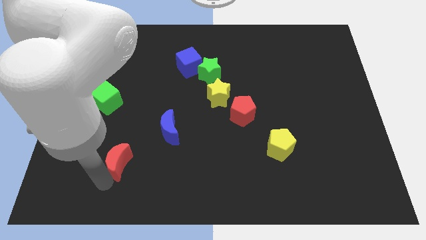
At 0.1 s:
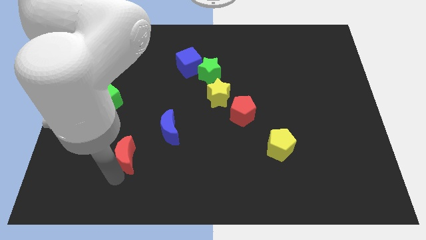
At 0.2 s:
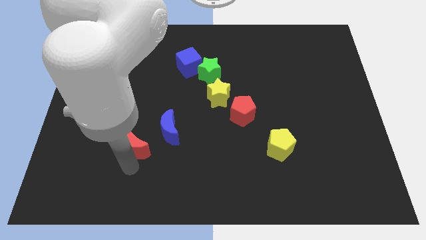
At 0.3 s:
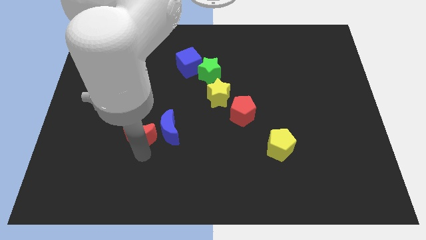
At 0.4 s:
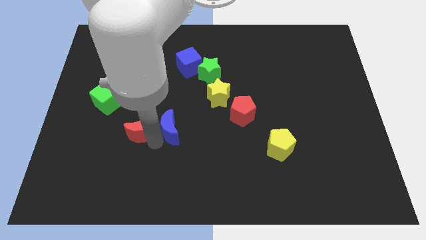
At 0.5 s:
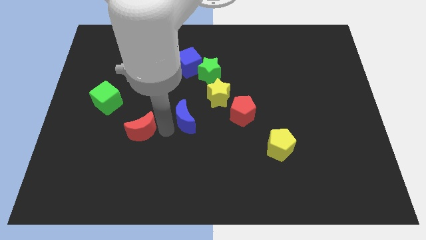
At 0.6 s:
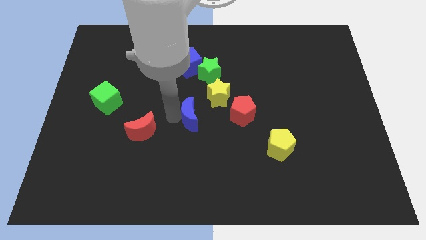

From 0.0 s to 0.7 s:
touch at the left side of the blue crescent

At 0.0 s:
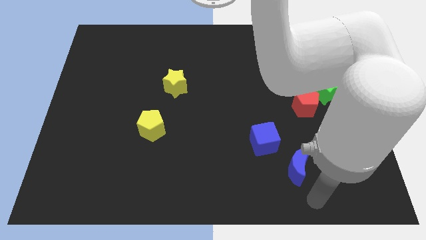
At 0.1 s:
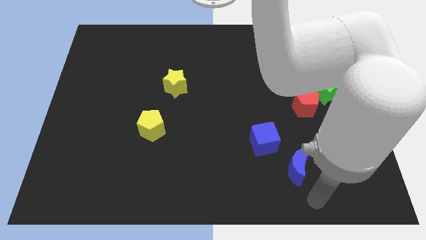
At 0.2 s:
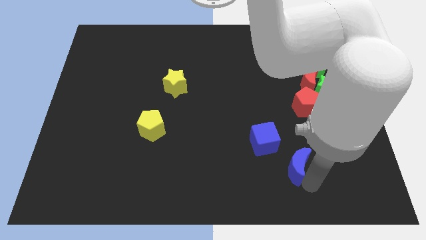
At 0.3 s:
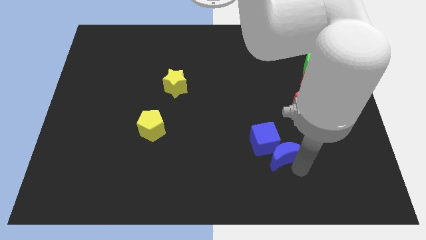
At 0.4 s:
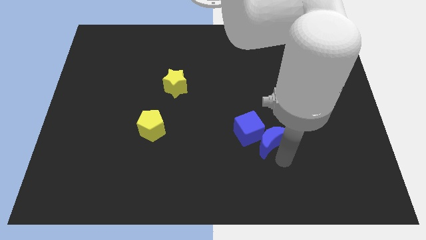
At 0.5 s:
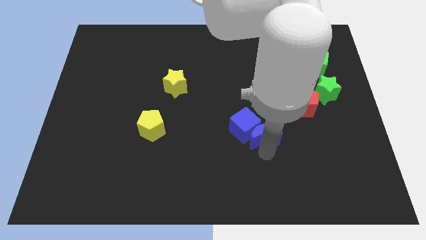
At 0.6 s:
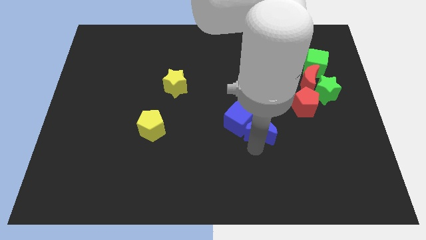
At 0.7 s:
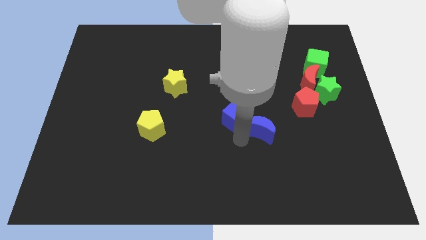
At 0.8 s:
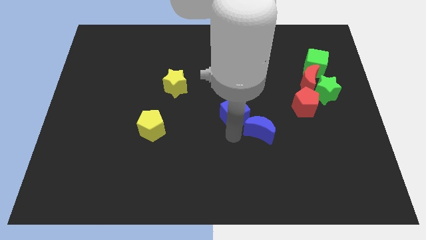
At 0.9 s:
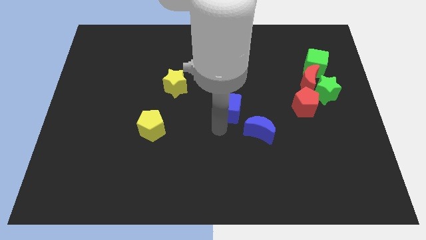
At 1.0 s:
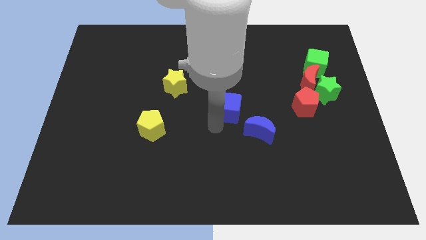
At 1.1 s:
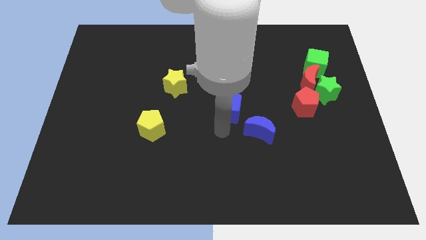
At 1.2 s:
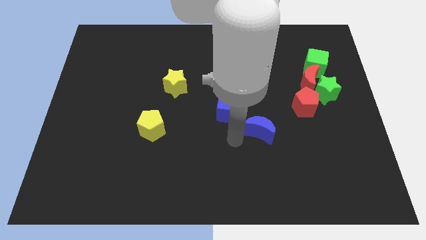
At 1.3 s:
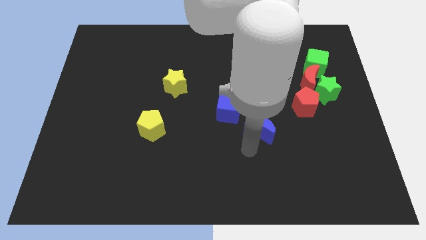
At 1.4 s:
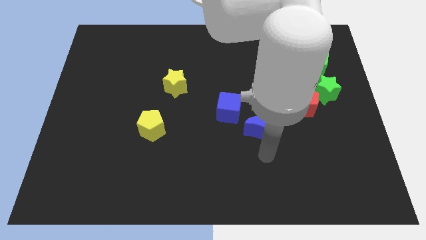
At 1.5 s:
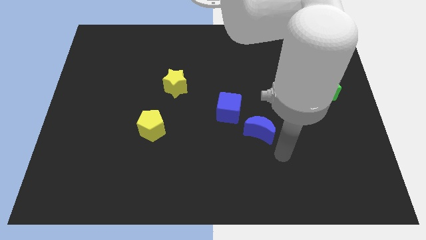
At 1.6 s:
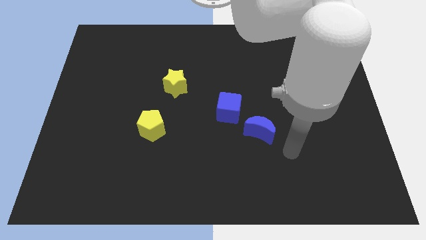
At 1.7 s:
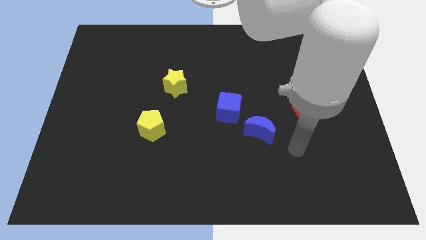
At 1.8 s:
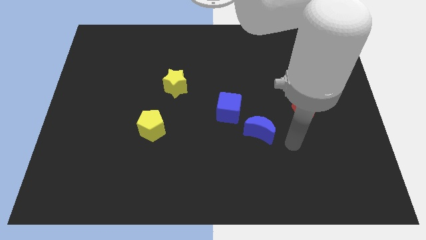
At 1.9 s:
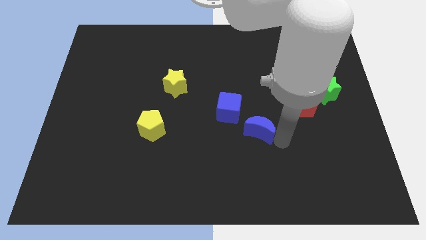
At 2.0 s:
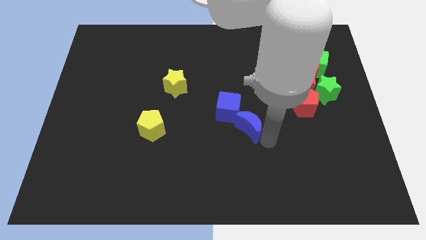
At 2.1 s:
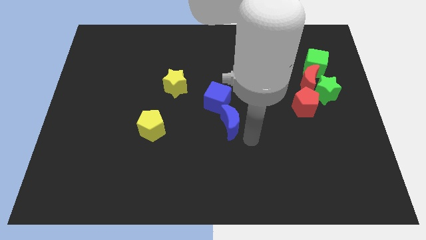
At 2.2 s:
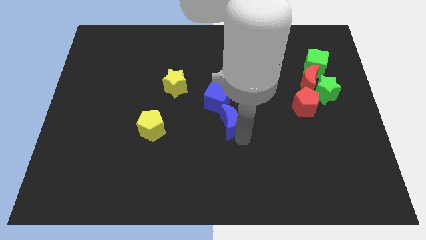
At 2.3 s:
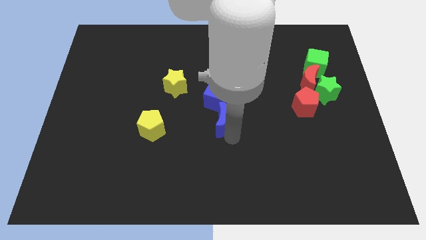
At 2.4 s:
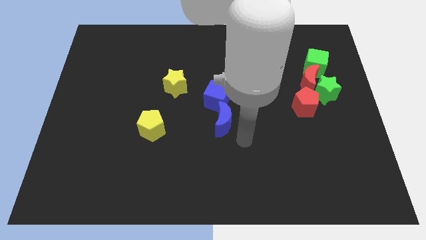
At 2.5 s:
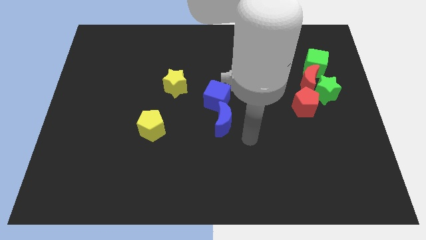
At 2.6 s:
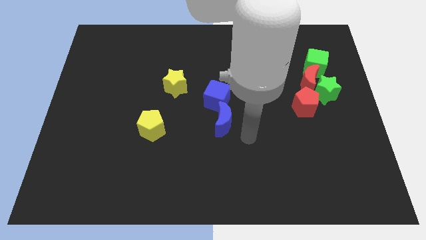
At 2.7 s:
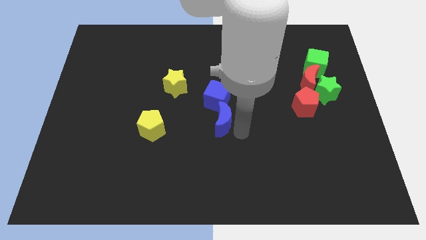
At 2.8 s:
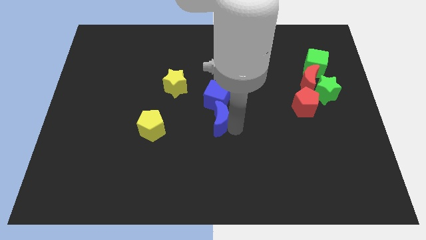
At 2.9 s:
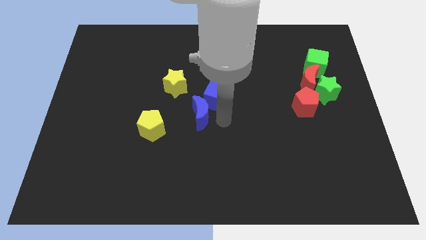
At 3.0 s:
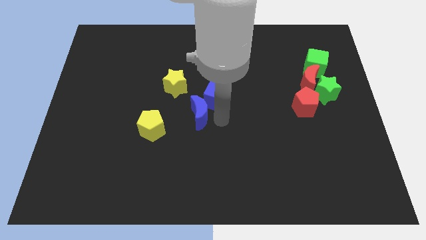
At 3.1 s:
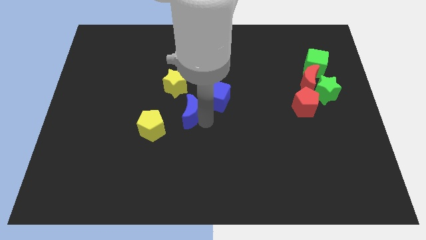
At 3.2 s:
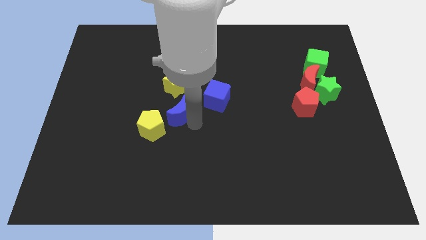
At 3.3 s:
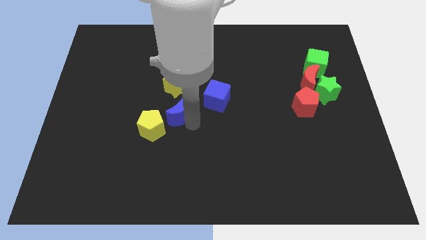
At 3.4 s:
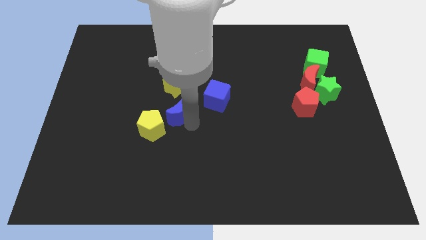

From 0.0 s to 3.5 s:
move the blue moon close to the yellow pentagon

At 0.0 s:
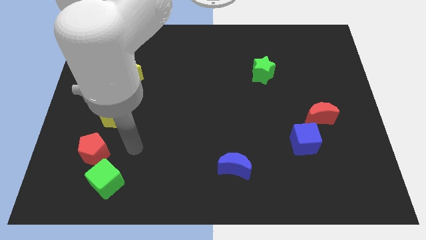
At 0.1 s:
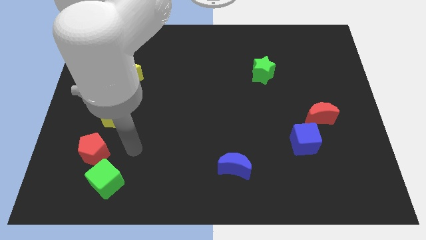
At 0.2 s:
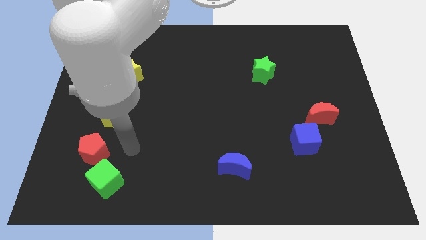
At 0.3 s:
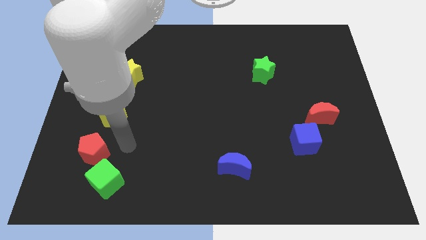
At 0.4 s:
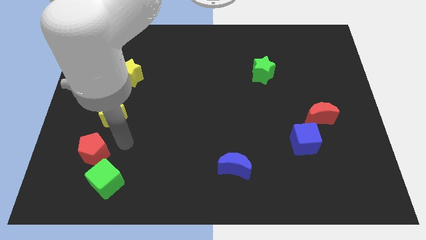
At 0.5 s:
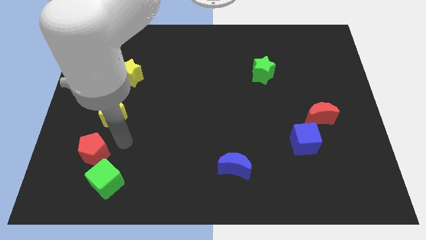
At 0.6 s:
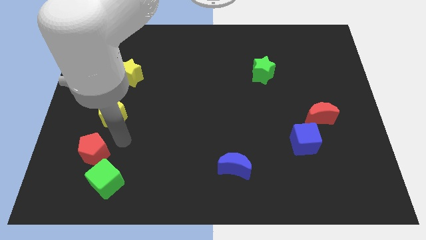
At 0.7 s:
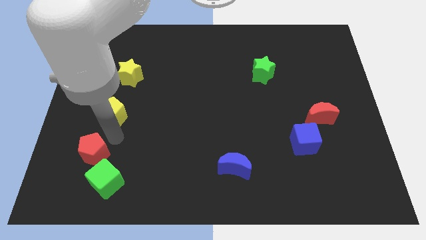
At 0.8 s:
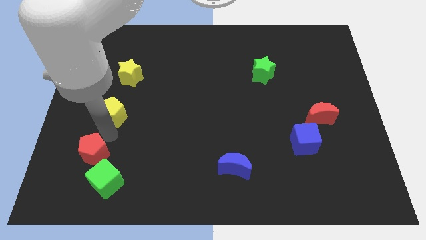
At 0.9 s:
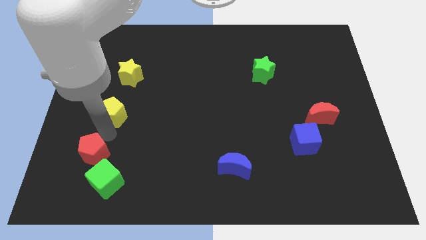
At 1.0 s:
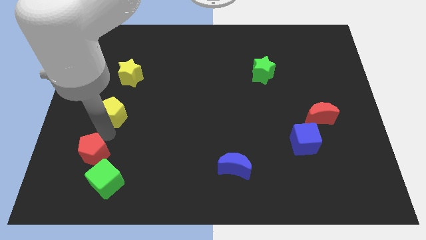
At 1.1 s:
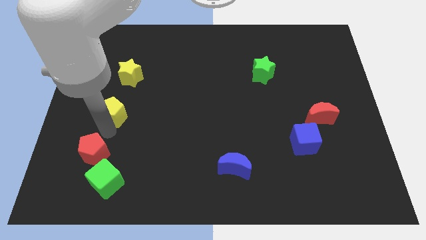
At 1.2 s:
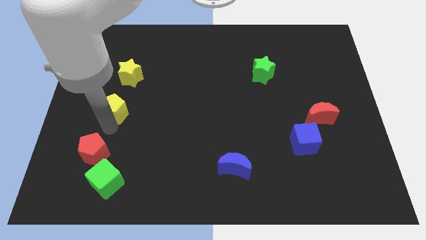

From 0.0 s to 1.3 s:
place the arm down to the yellow pentagon

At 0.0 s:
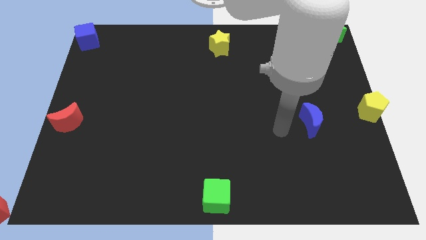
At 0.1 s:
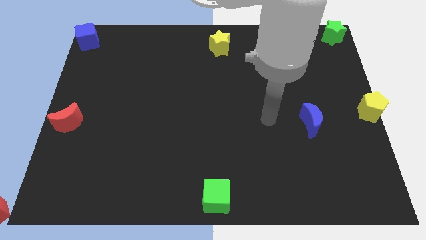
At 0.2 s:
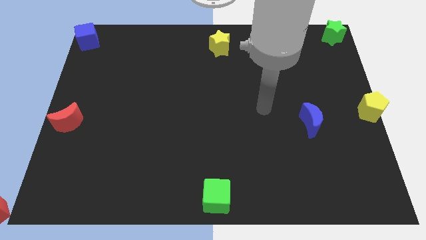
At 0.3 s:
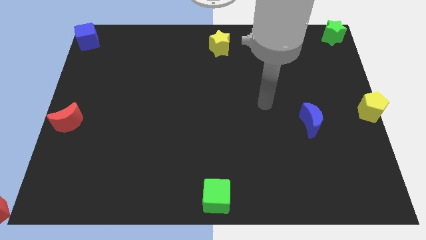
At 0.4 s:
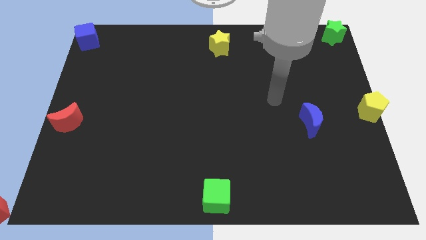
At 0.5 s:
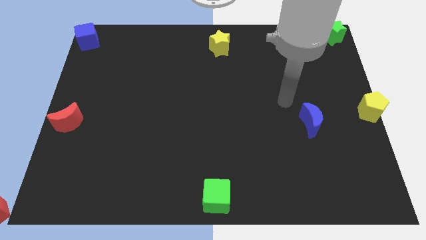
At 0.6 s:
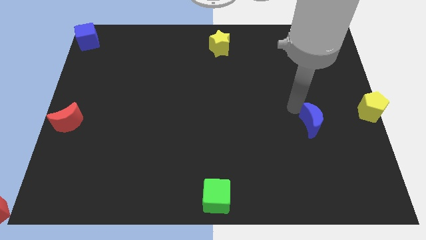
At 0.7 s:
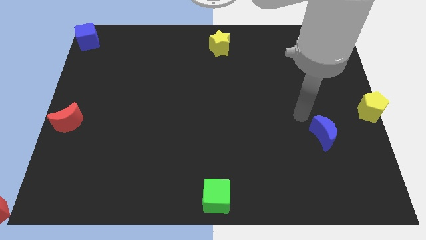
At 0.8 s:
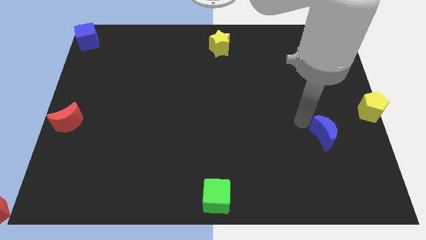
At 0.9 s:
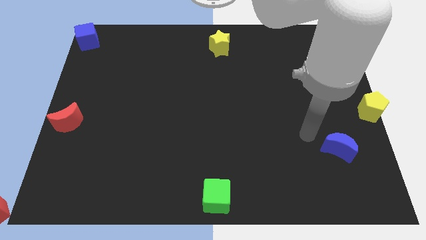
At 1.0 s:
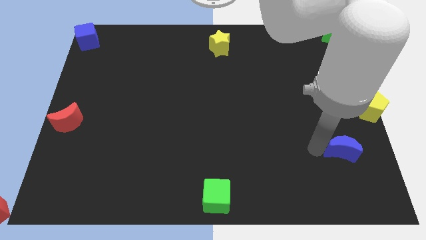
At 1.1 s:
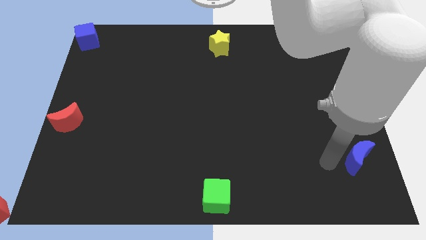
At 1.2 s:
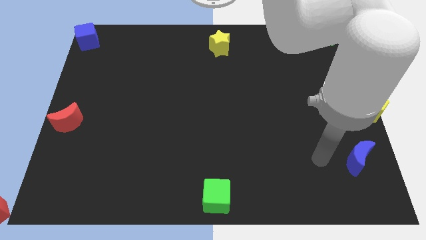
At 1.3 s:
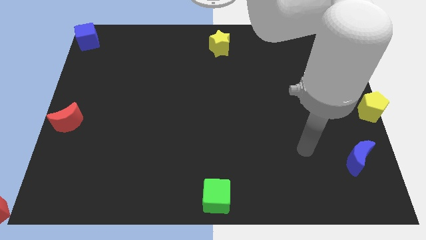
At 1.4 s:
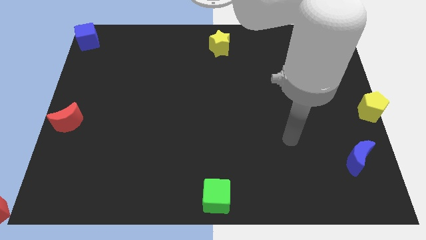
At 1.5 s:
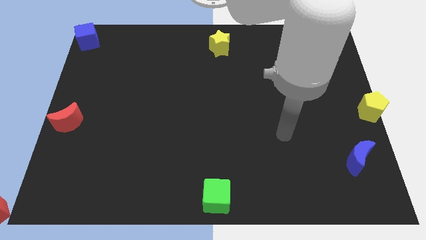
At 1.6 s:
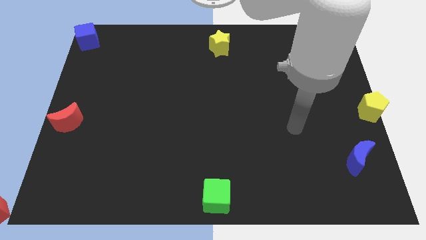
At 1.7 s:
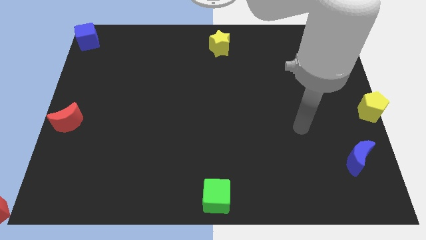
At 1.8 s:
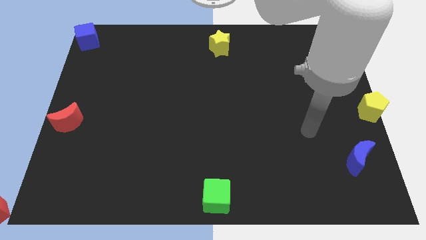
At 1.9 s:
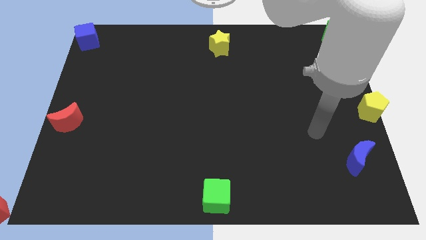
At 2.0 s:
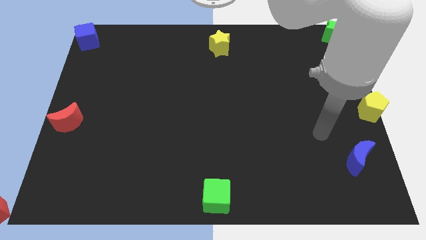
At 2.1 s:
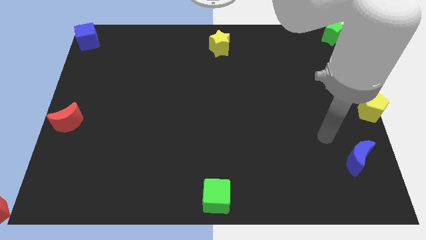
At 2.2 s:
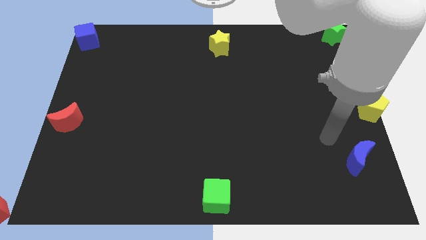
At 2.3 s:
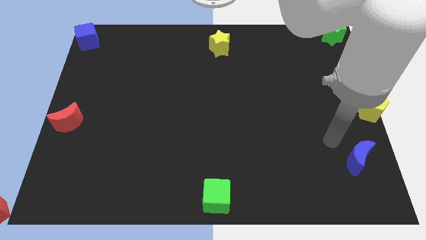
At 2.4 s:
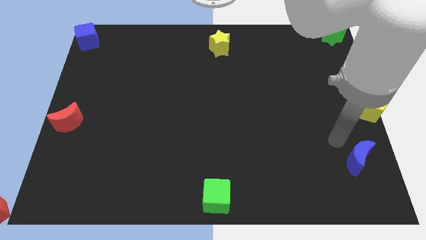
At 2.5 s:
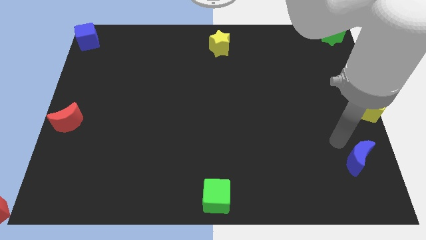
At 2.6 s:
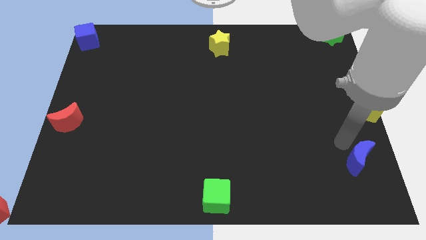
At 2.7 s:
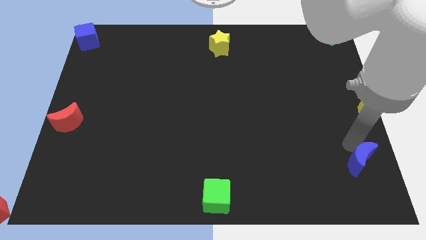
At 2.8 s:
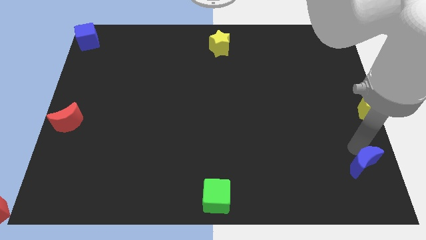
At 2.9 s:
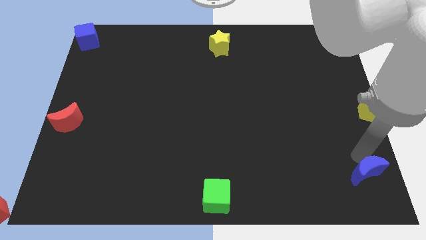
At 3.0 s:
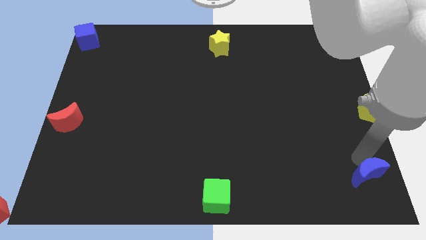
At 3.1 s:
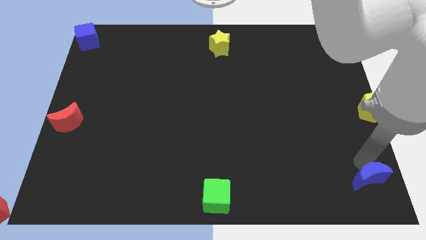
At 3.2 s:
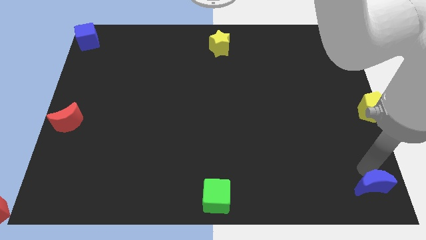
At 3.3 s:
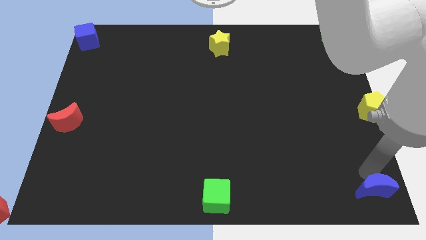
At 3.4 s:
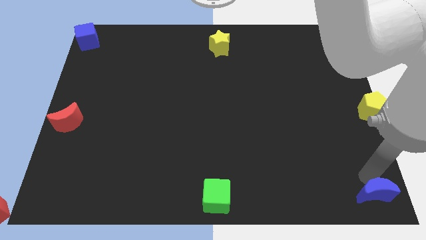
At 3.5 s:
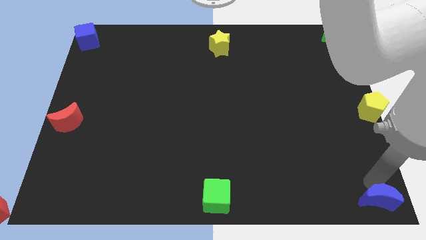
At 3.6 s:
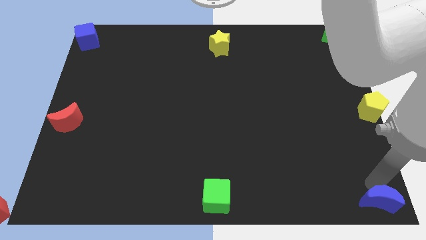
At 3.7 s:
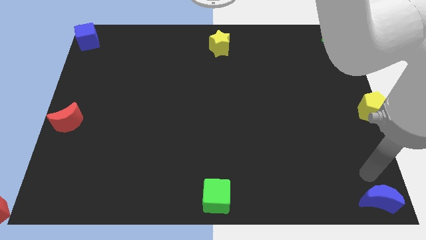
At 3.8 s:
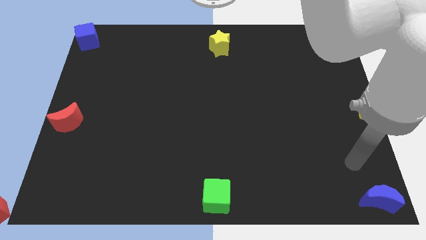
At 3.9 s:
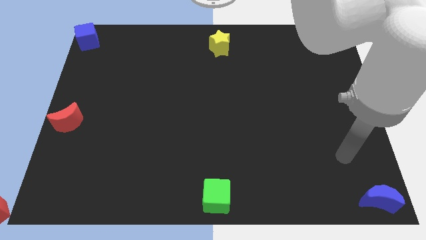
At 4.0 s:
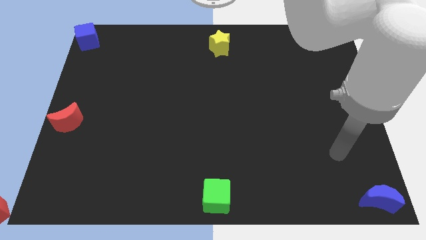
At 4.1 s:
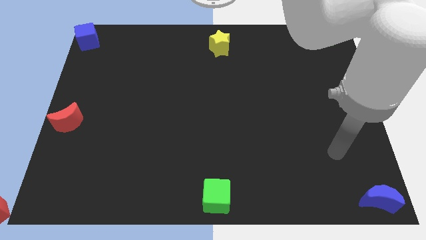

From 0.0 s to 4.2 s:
move the blue moon to the bottom right of the board
